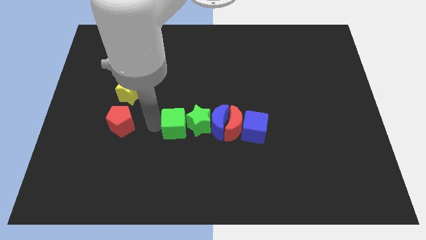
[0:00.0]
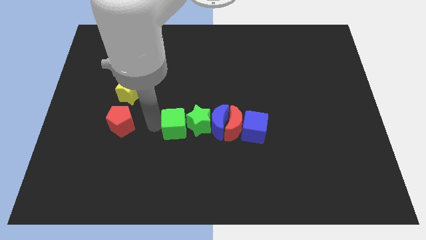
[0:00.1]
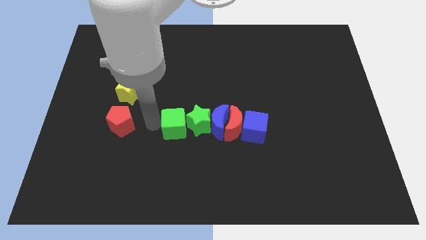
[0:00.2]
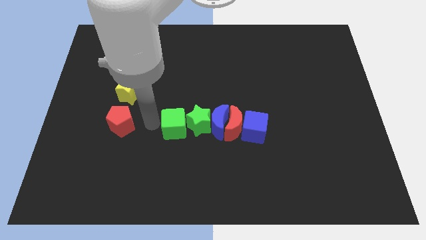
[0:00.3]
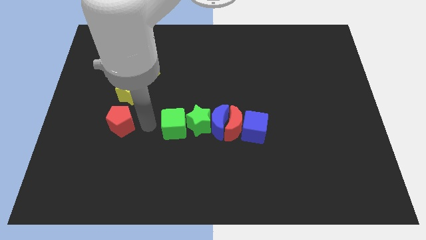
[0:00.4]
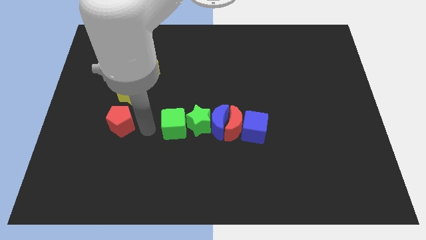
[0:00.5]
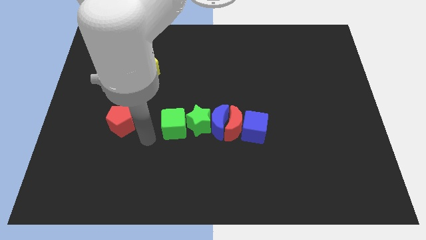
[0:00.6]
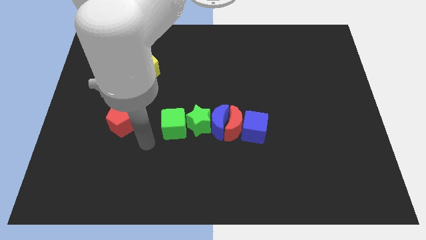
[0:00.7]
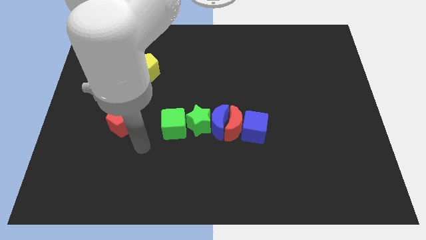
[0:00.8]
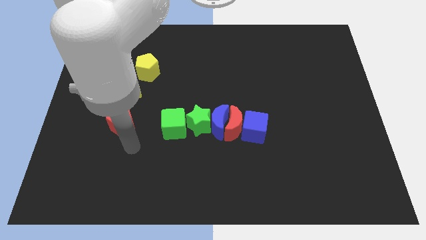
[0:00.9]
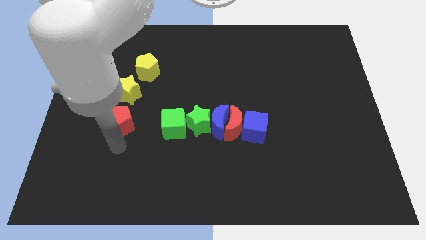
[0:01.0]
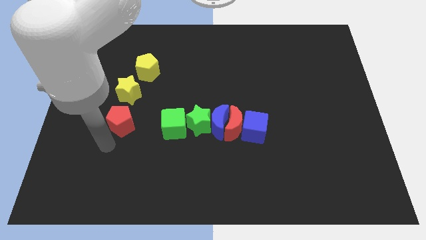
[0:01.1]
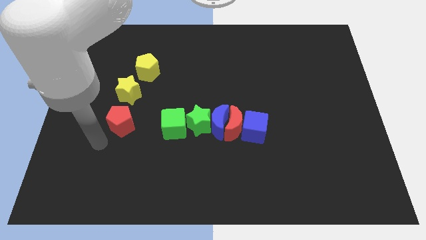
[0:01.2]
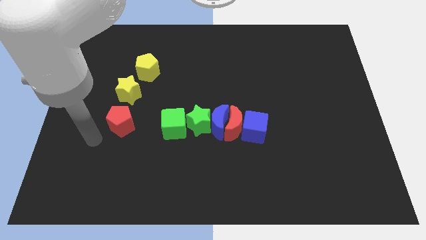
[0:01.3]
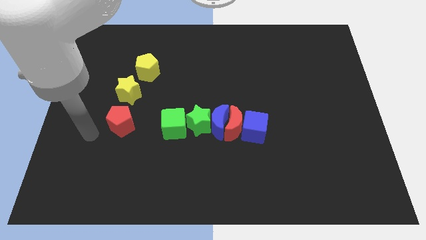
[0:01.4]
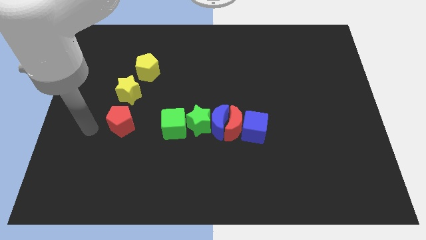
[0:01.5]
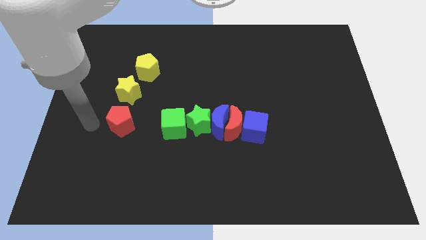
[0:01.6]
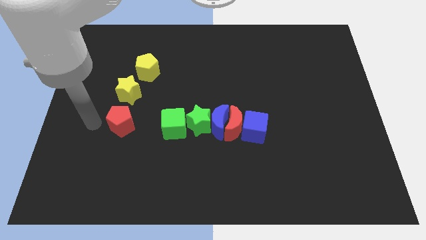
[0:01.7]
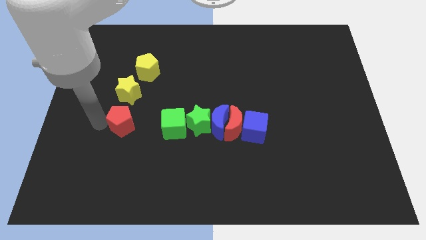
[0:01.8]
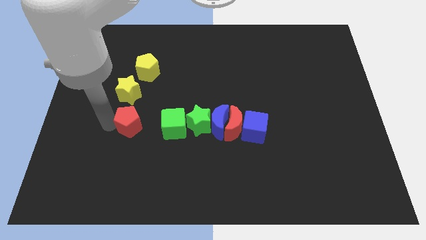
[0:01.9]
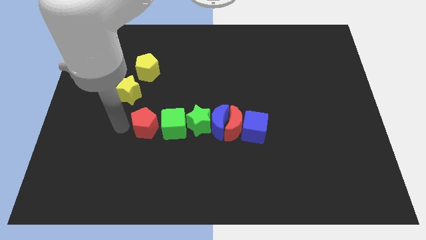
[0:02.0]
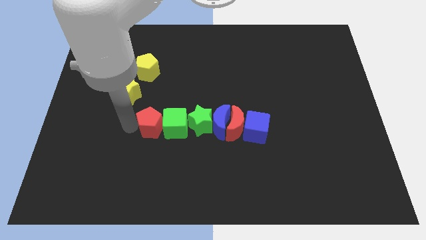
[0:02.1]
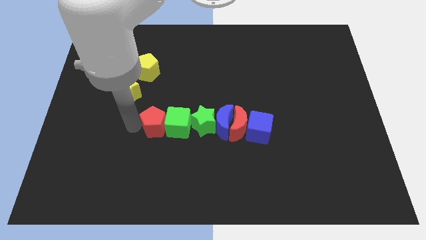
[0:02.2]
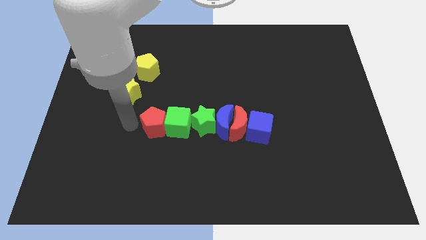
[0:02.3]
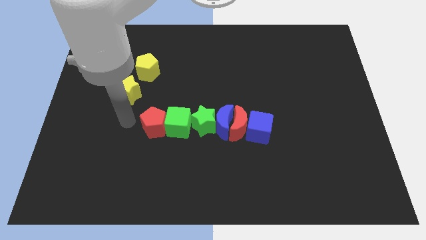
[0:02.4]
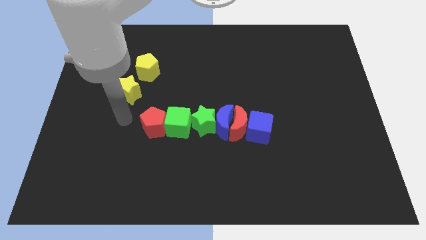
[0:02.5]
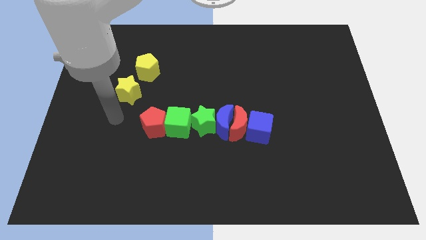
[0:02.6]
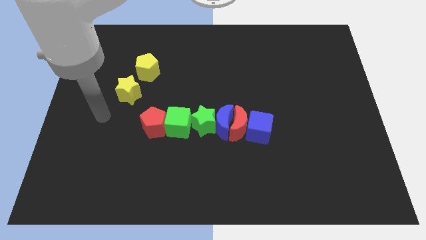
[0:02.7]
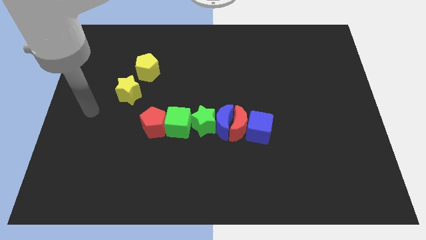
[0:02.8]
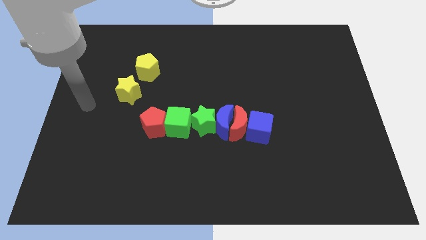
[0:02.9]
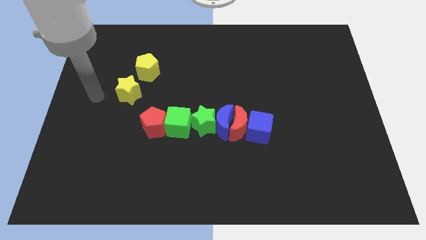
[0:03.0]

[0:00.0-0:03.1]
push the red pentagon at the left side of the green cube

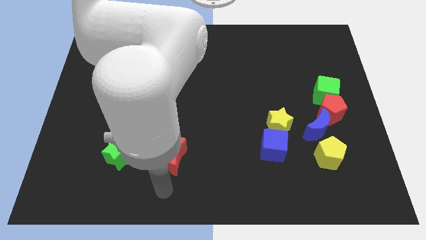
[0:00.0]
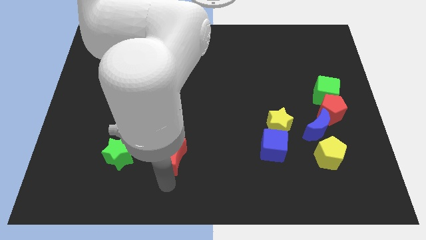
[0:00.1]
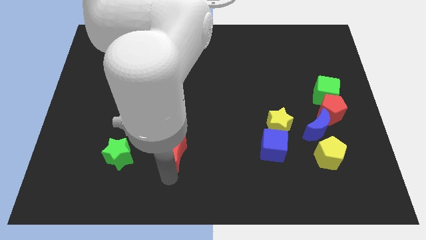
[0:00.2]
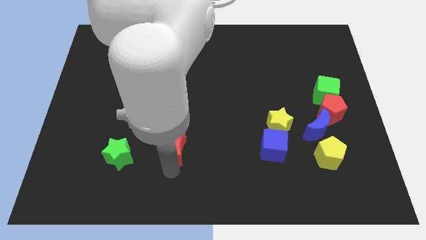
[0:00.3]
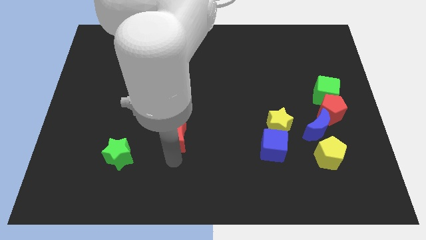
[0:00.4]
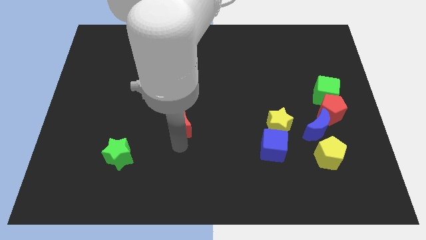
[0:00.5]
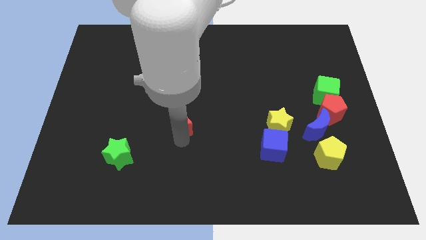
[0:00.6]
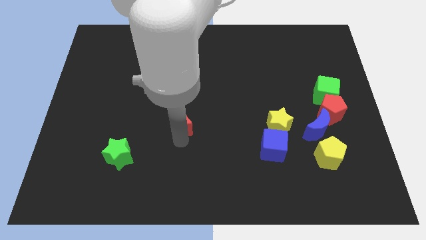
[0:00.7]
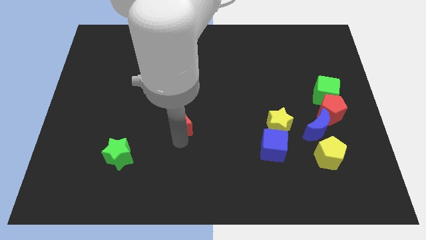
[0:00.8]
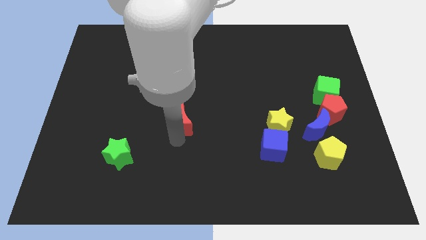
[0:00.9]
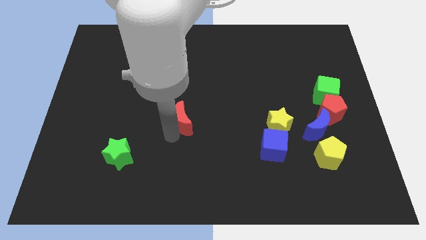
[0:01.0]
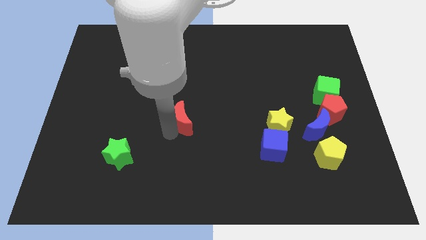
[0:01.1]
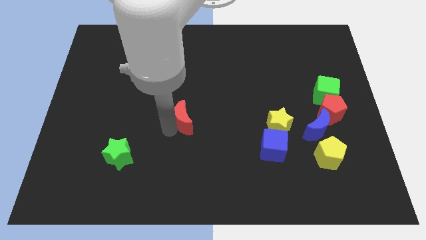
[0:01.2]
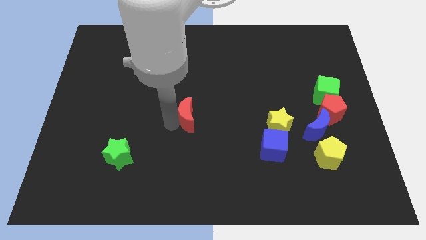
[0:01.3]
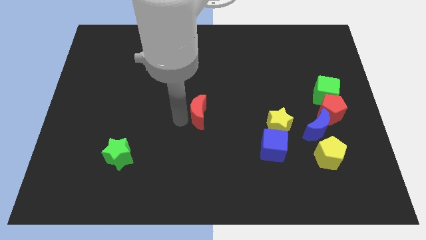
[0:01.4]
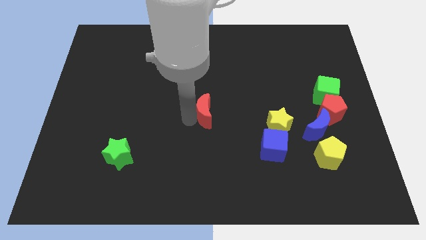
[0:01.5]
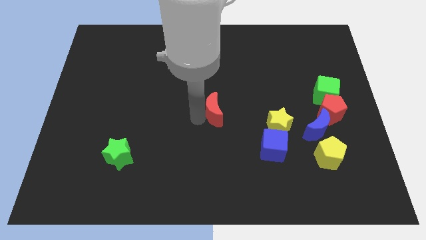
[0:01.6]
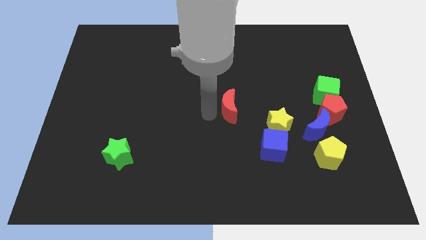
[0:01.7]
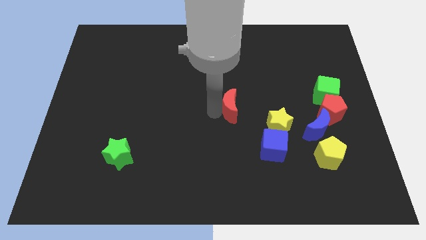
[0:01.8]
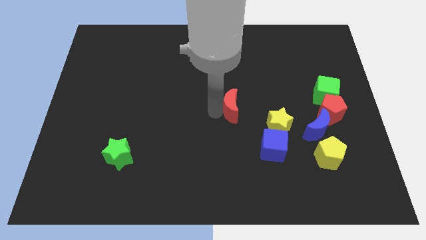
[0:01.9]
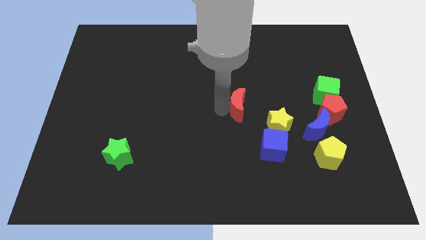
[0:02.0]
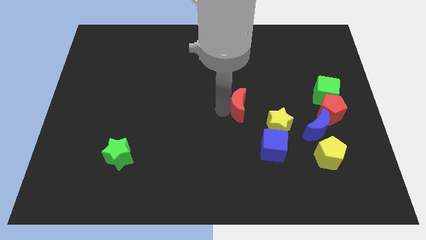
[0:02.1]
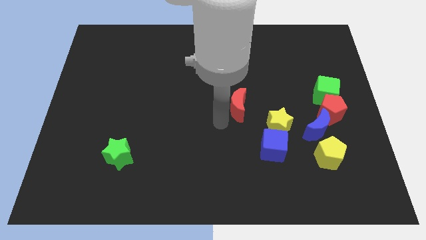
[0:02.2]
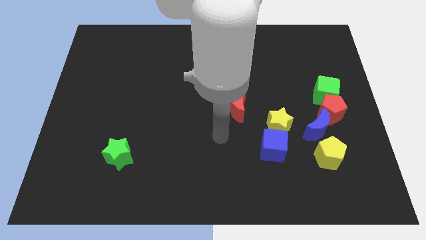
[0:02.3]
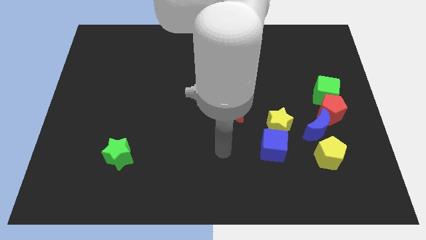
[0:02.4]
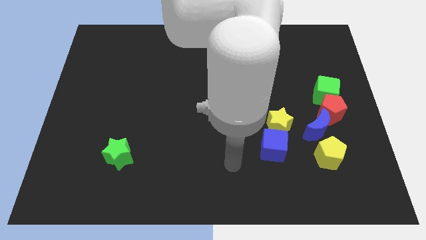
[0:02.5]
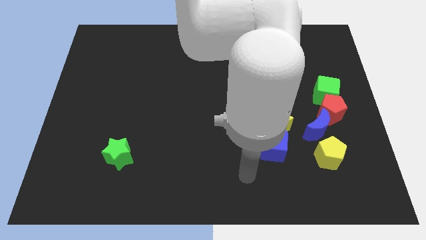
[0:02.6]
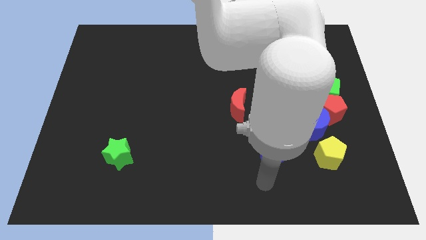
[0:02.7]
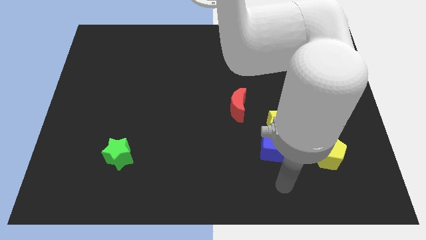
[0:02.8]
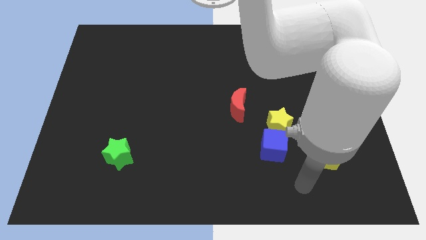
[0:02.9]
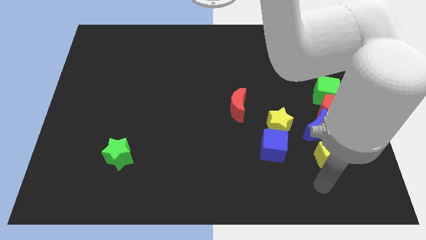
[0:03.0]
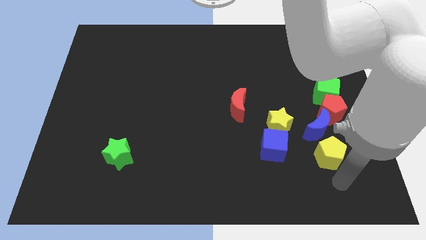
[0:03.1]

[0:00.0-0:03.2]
move the red crescent to the center of the board

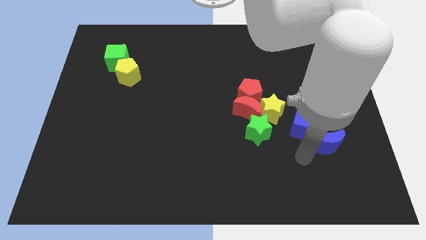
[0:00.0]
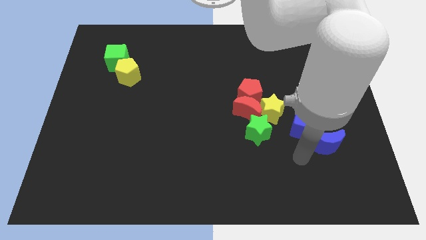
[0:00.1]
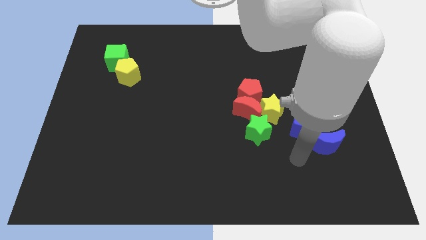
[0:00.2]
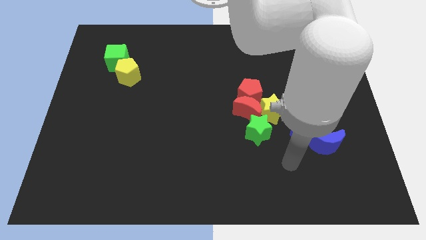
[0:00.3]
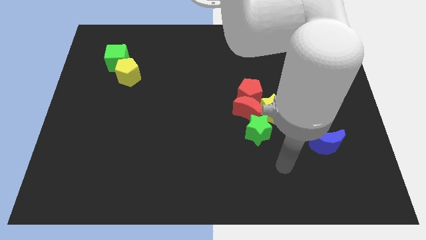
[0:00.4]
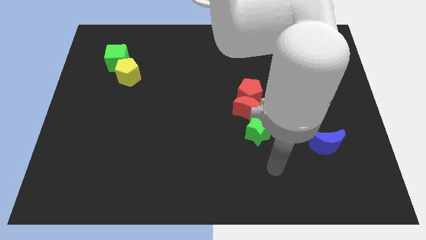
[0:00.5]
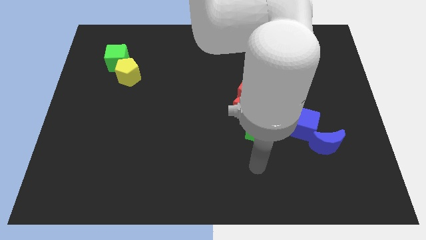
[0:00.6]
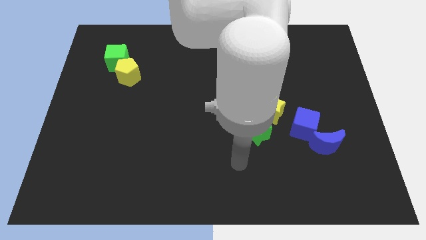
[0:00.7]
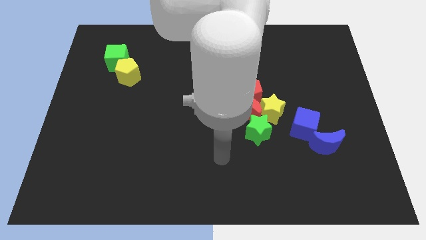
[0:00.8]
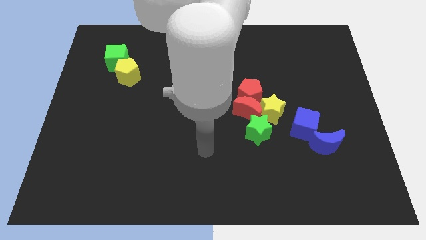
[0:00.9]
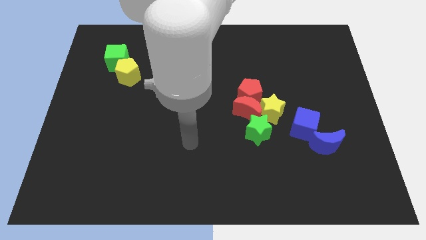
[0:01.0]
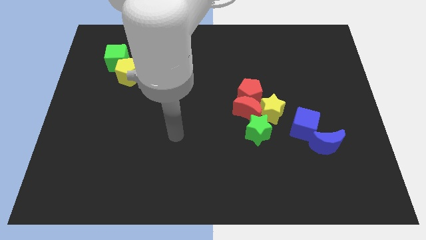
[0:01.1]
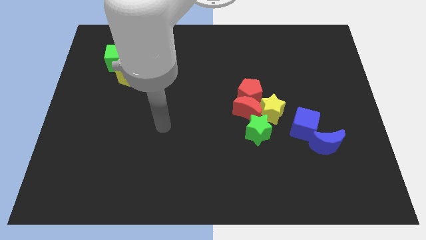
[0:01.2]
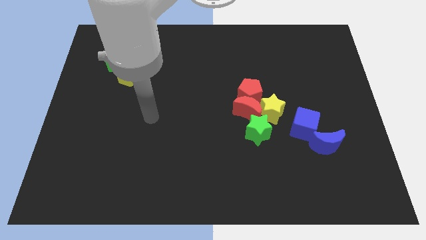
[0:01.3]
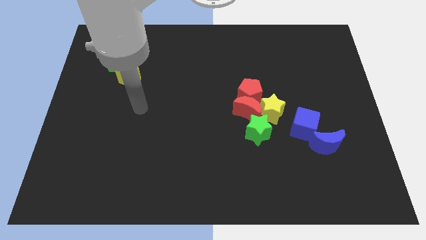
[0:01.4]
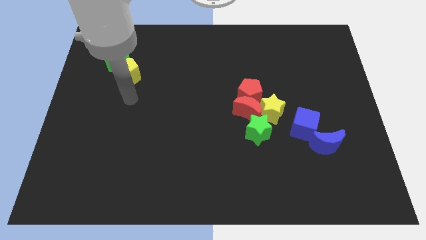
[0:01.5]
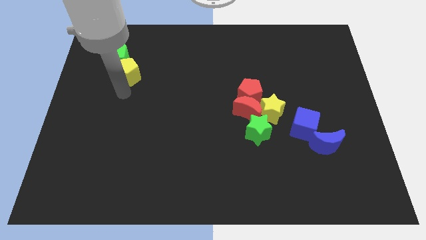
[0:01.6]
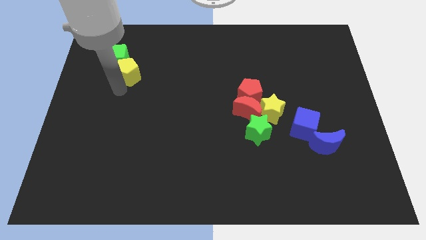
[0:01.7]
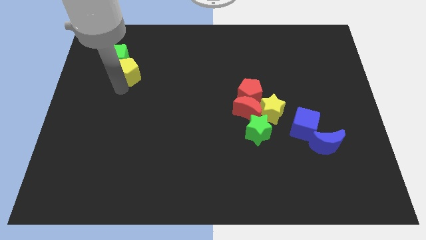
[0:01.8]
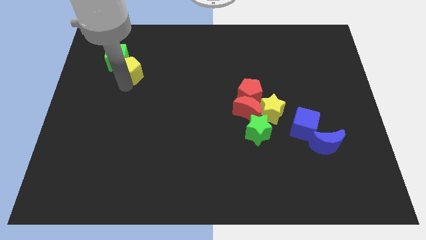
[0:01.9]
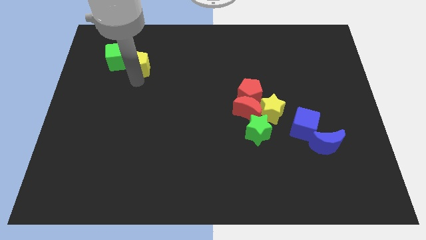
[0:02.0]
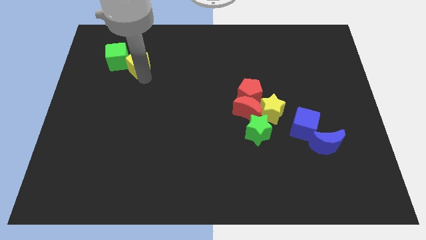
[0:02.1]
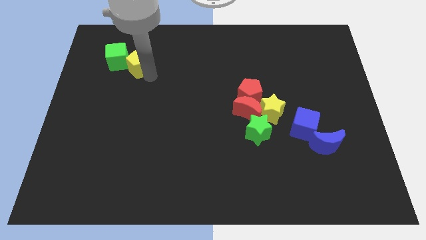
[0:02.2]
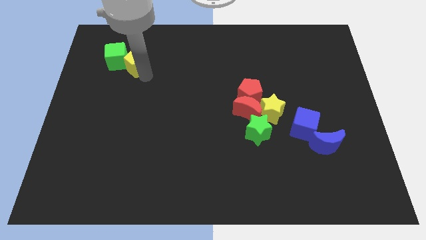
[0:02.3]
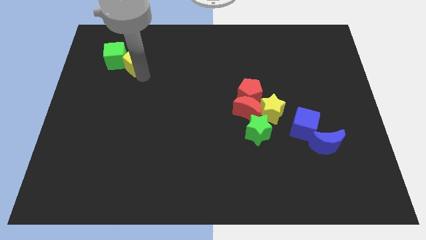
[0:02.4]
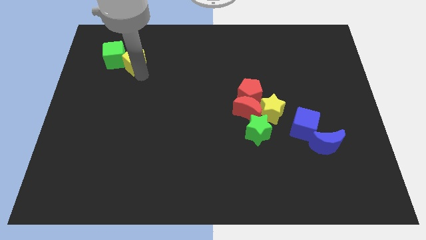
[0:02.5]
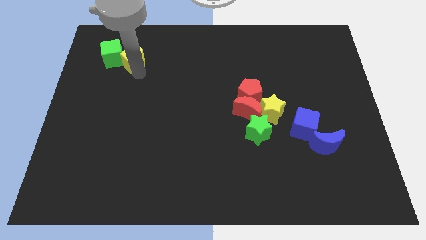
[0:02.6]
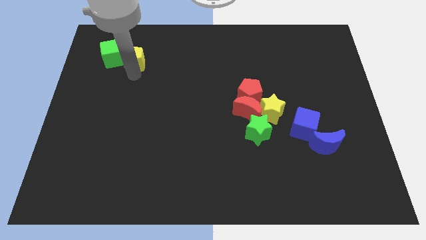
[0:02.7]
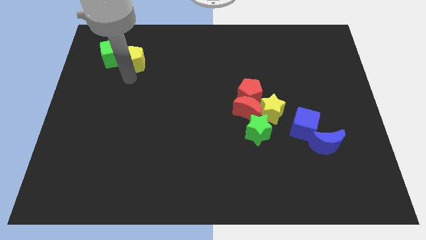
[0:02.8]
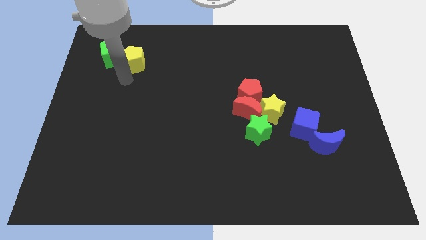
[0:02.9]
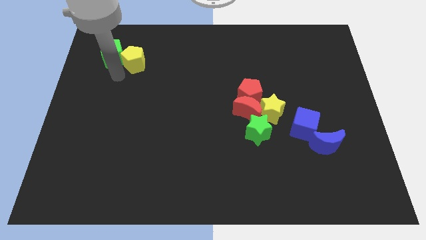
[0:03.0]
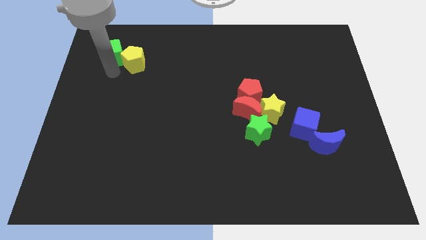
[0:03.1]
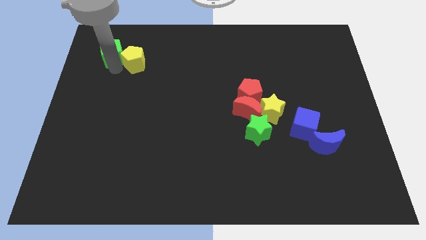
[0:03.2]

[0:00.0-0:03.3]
push the yellow pentagon into the green cube
